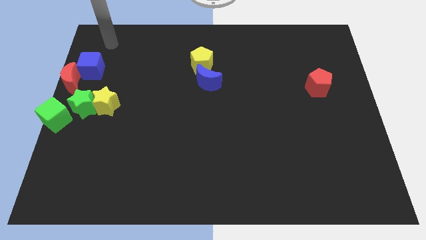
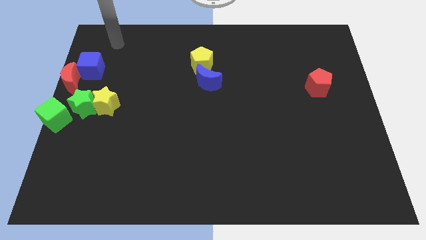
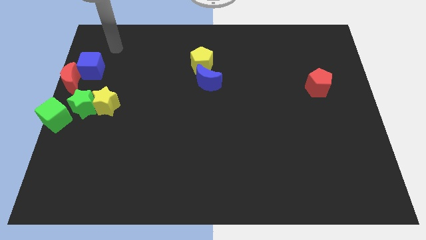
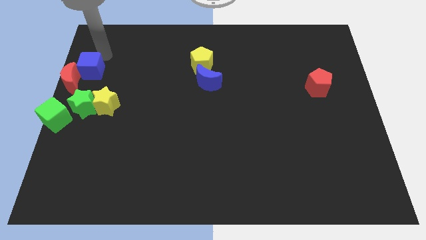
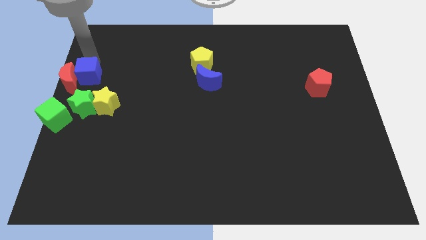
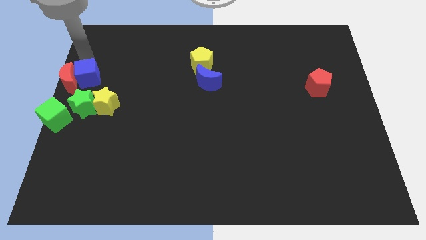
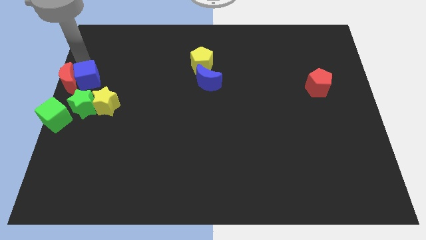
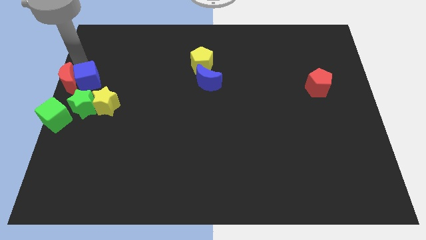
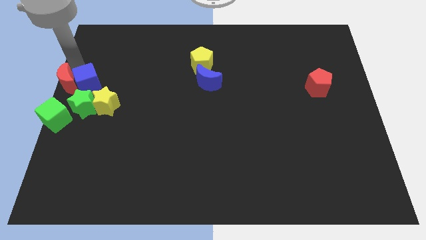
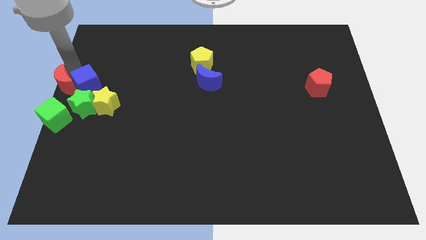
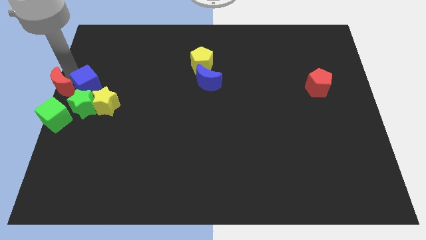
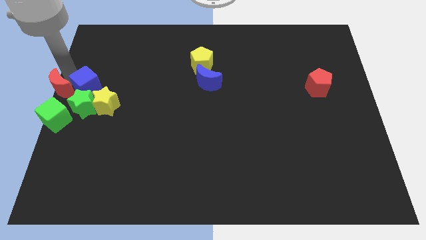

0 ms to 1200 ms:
slightly push the blue cube towards down

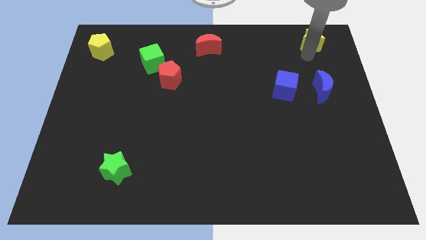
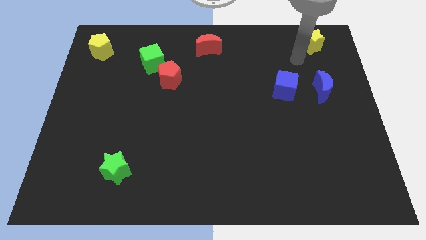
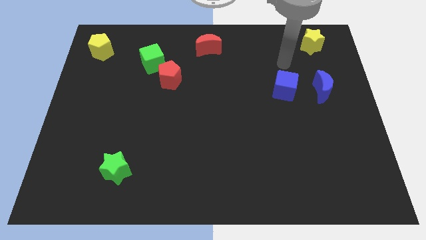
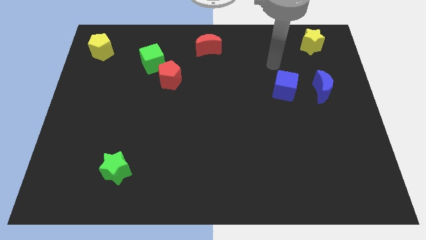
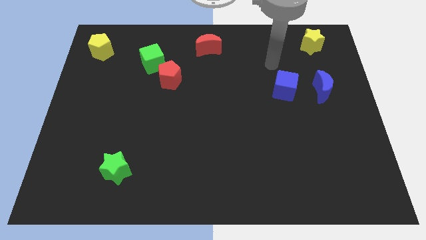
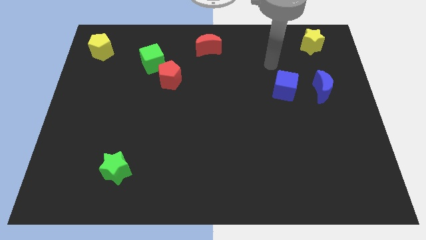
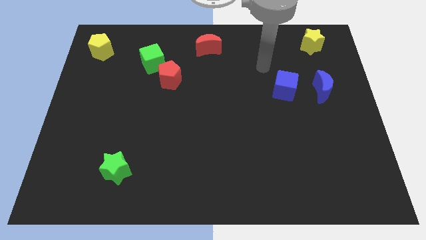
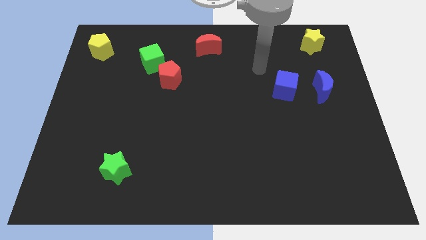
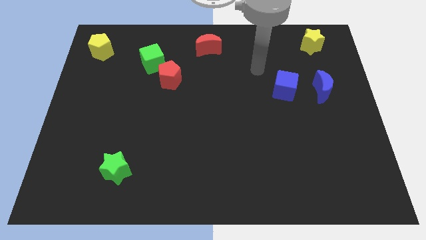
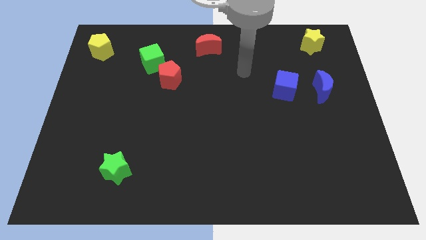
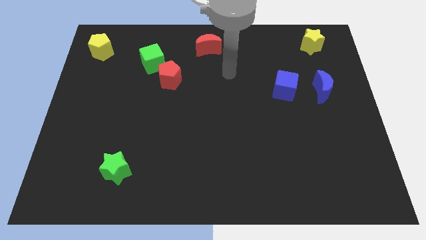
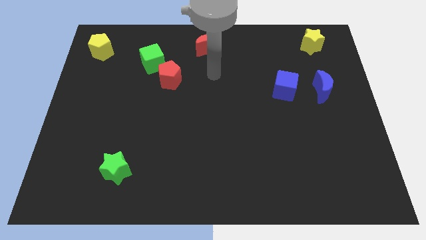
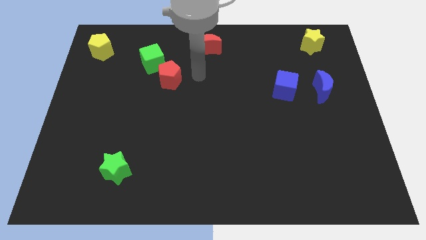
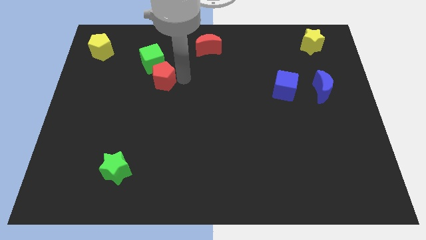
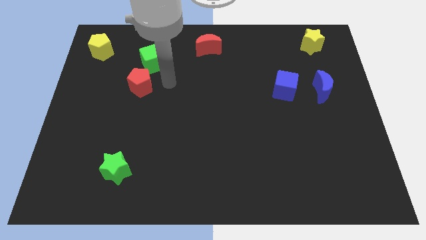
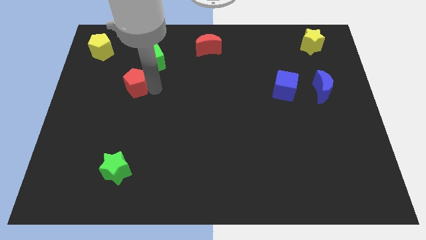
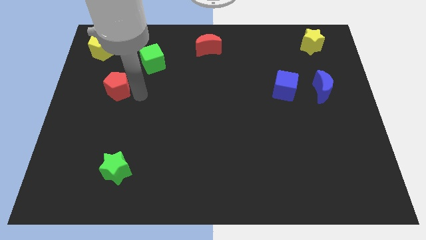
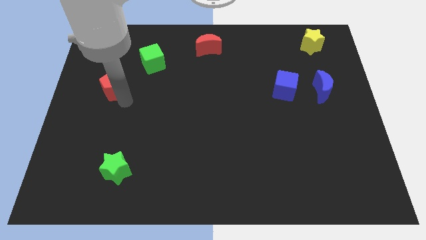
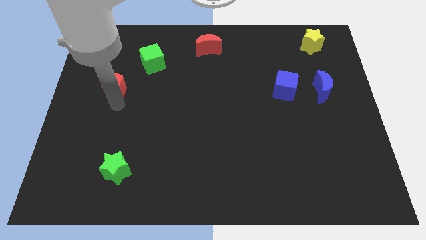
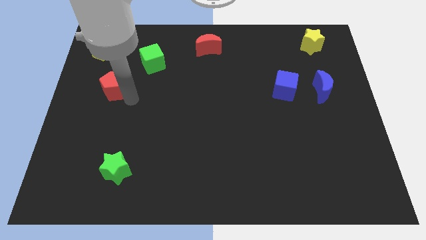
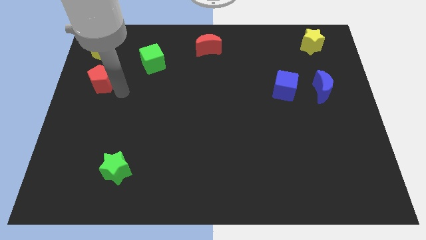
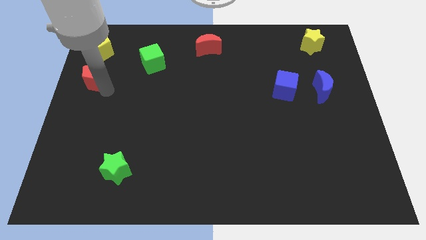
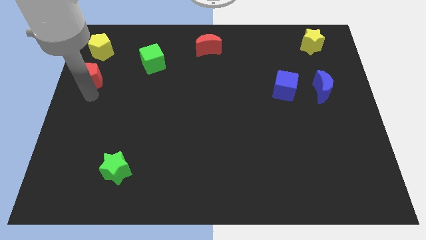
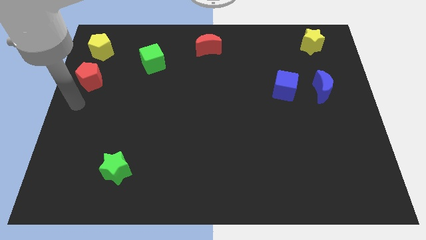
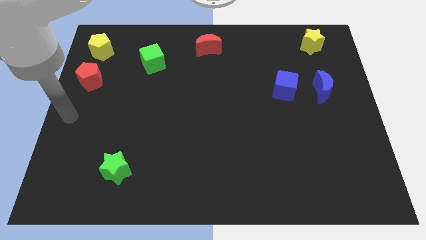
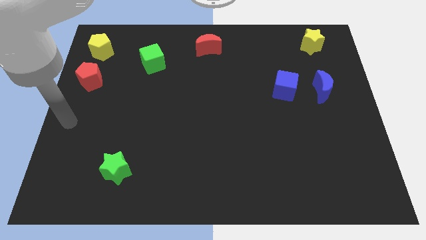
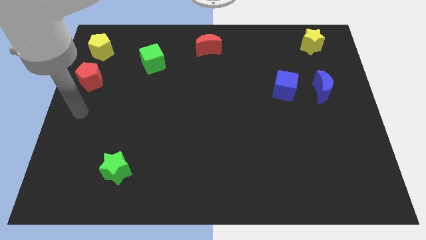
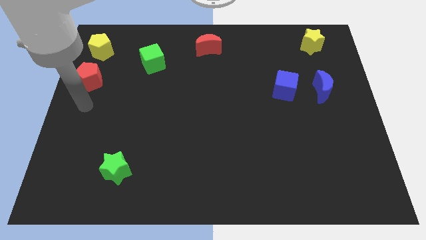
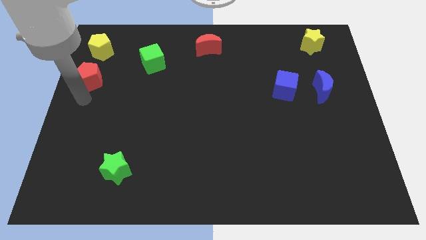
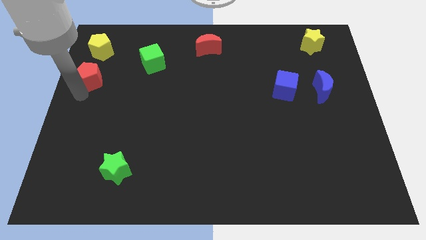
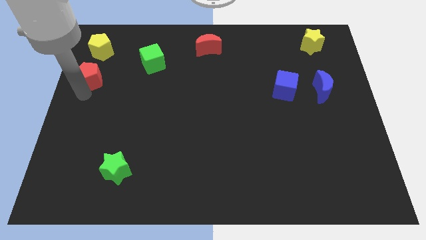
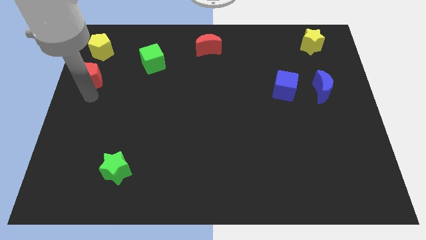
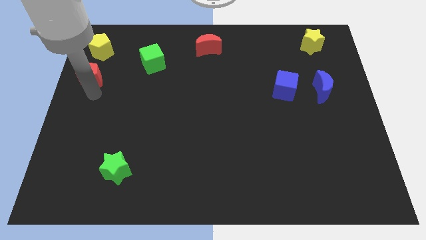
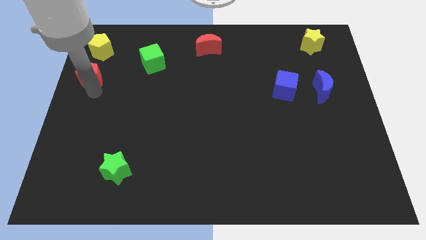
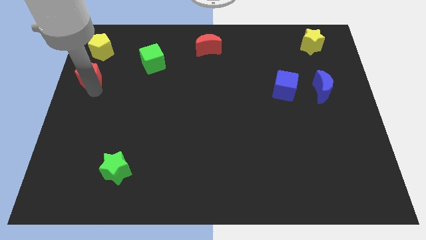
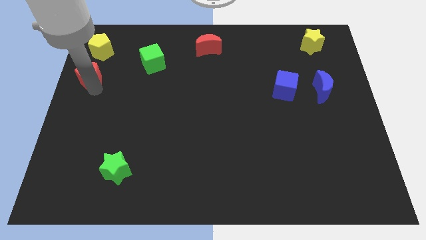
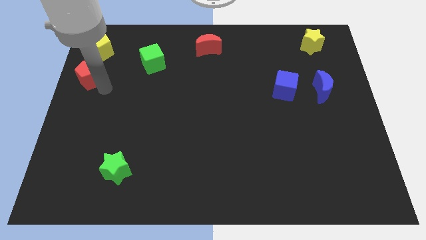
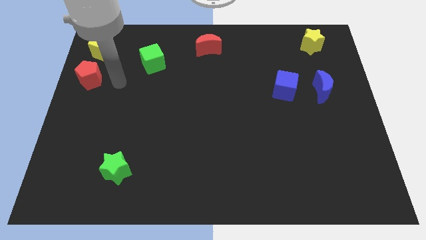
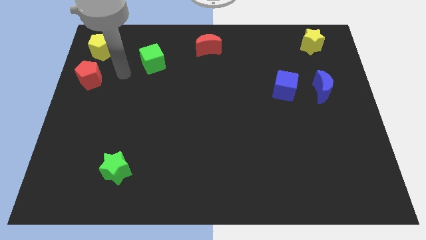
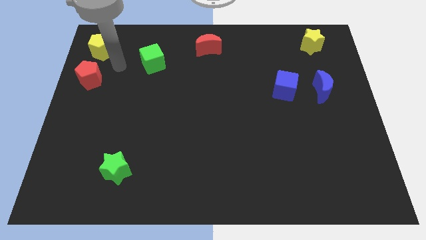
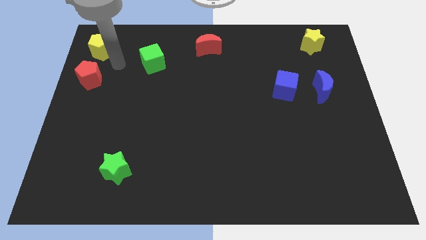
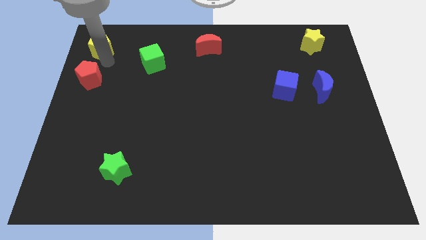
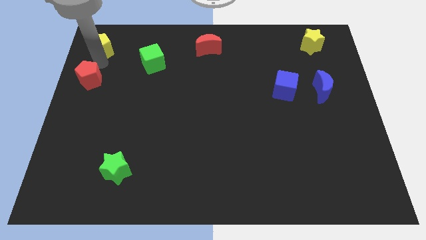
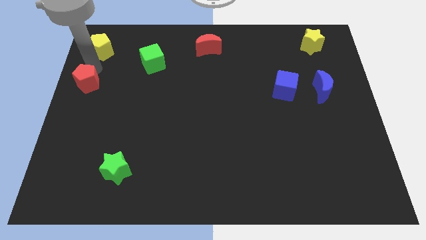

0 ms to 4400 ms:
move the red pentagon parallel below the yellow pentagon

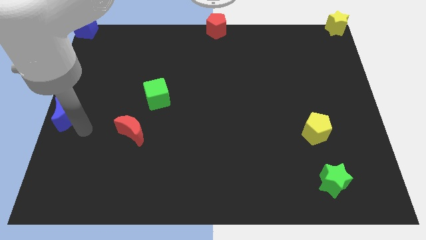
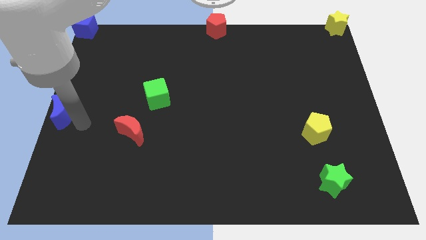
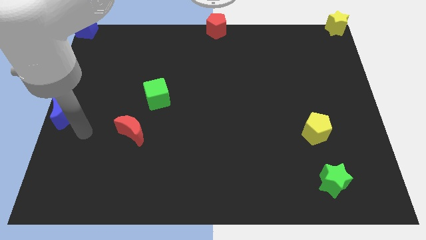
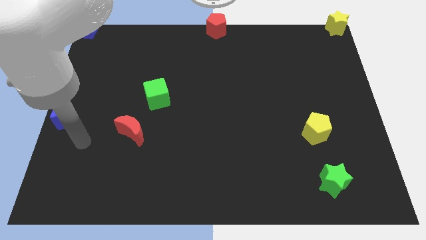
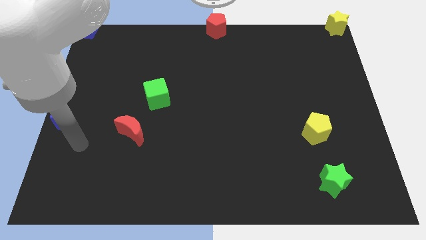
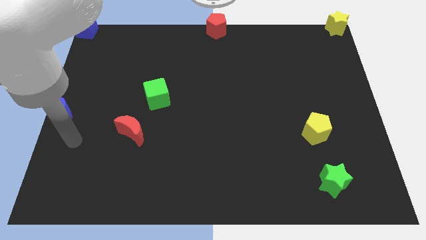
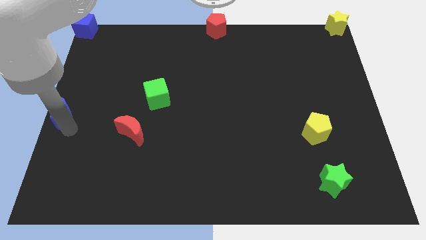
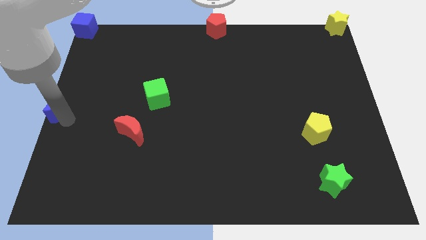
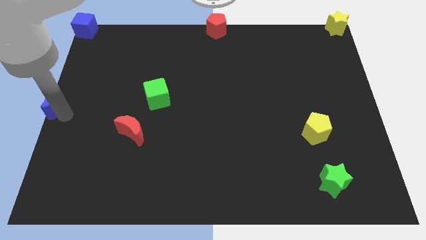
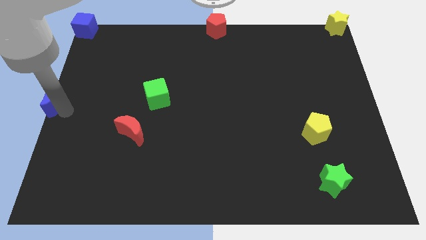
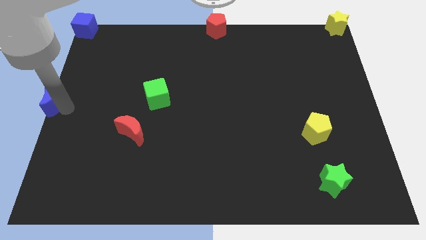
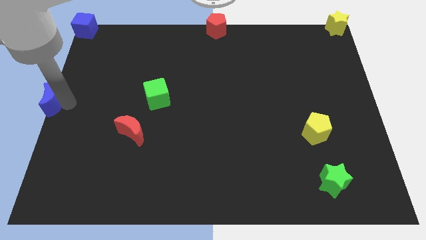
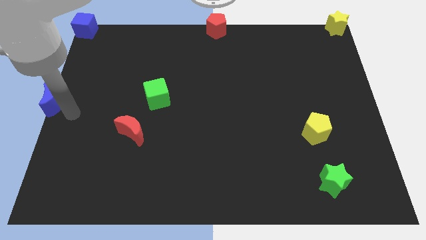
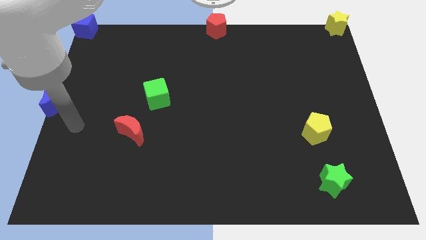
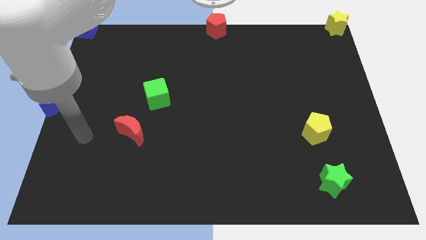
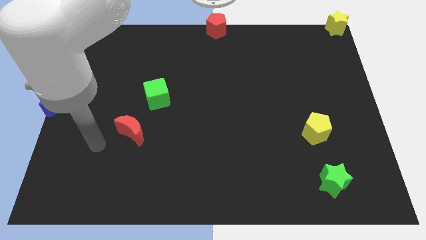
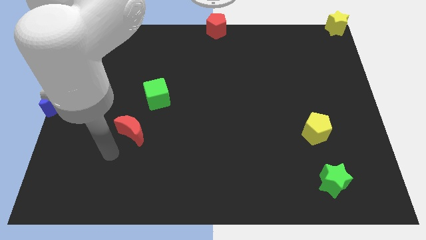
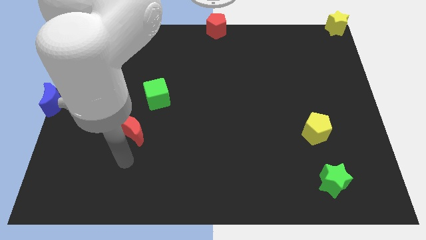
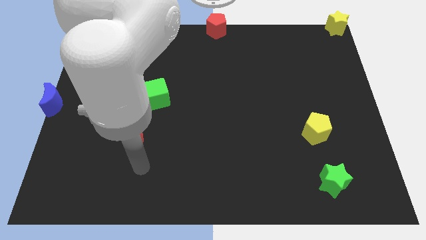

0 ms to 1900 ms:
move the blue moon to the center left

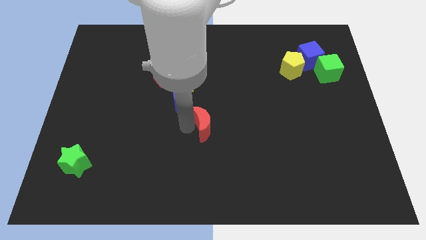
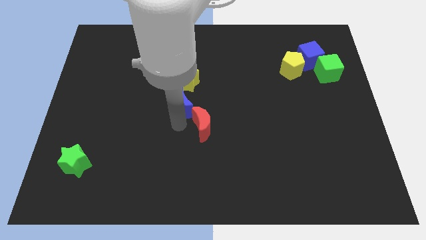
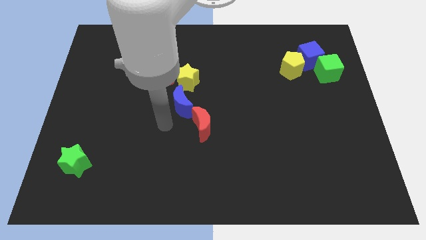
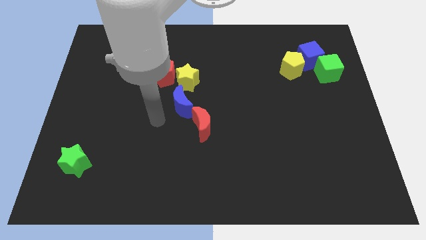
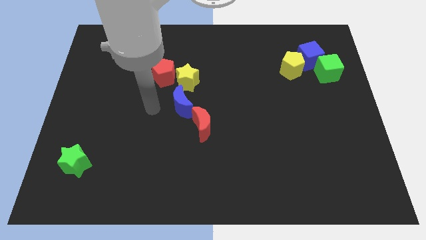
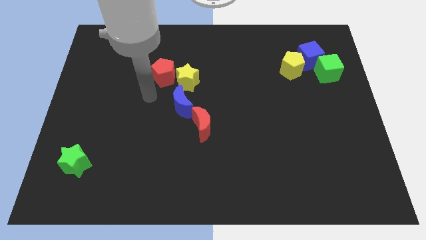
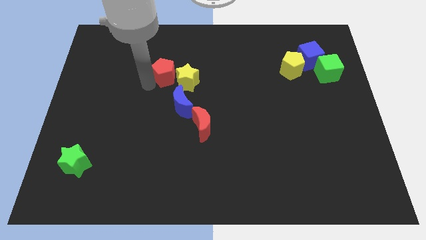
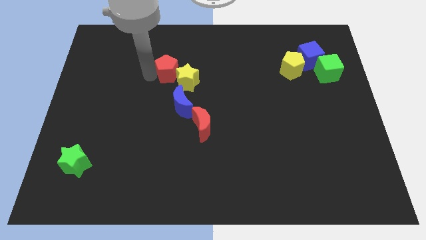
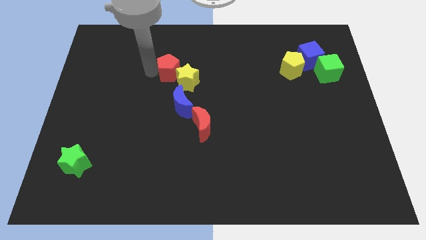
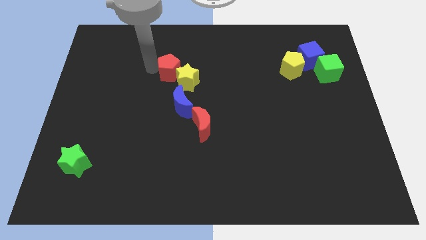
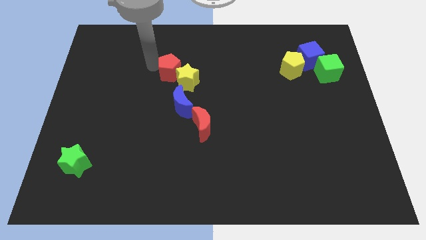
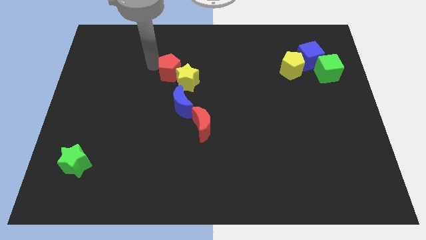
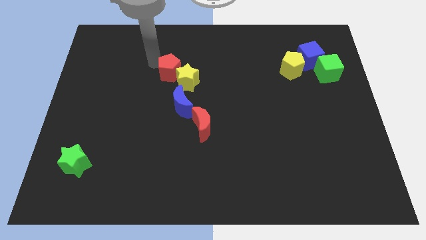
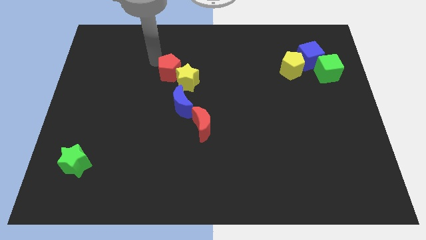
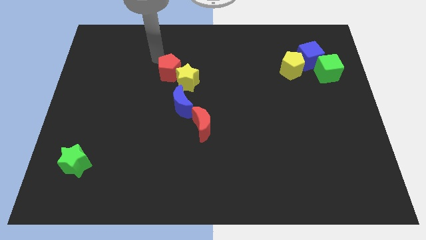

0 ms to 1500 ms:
place the red pentagon at the top left side of yellow star
